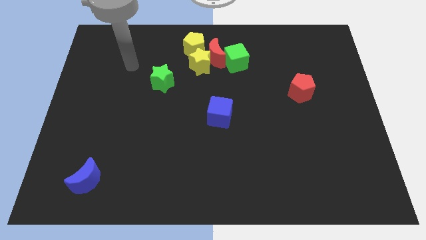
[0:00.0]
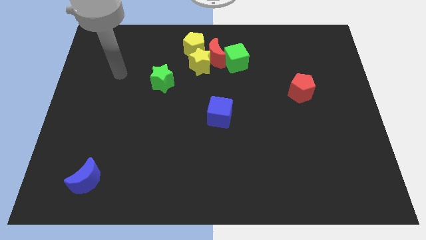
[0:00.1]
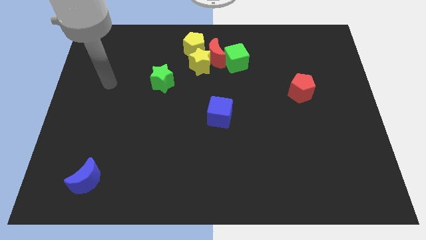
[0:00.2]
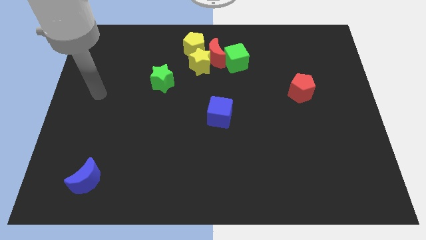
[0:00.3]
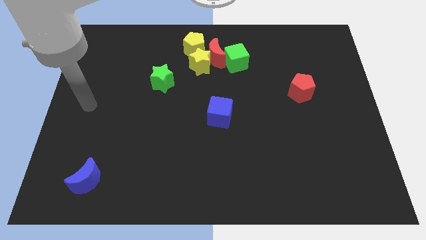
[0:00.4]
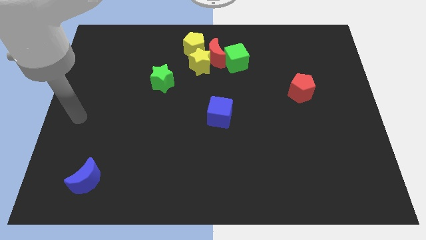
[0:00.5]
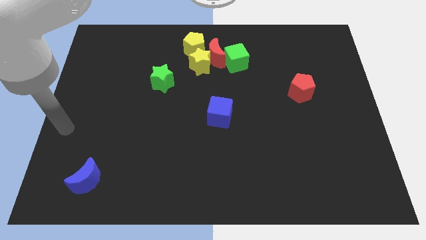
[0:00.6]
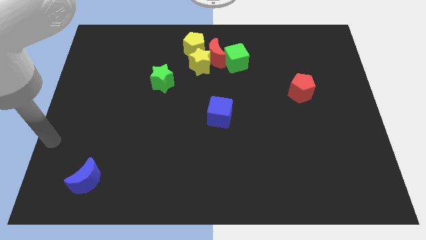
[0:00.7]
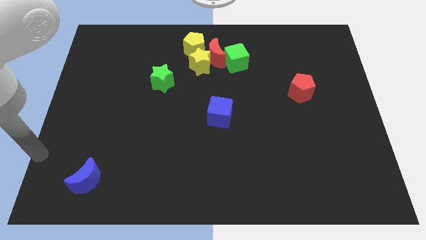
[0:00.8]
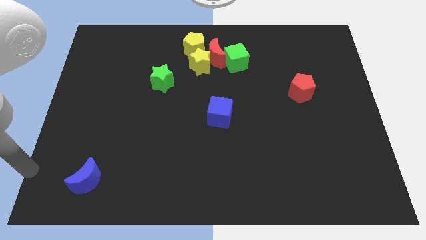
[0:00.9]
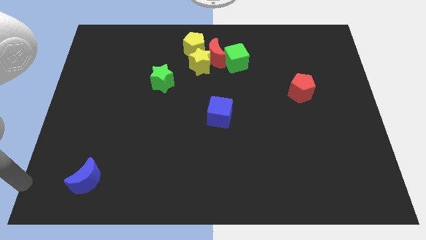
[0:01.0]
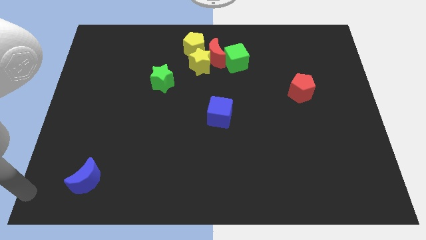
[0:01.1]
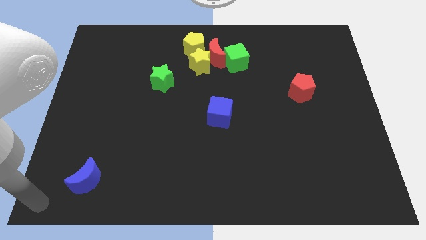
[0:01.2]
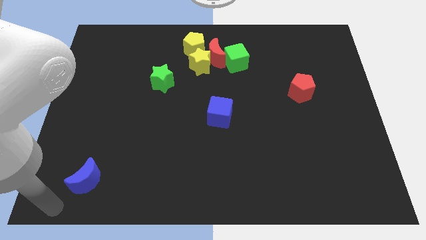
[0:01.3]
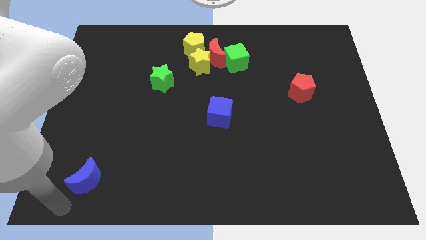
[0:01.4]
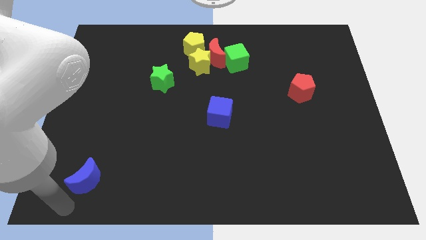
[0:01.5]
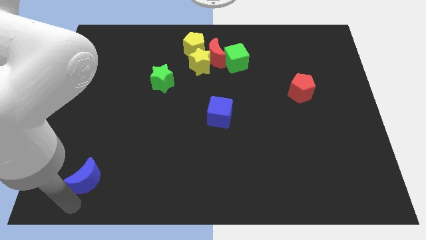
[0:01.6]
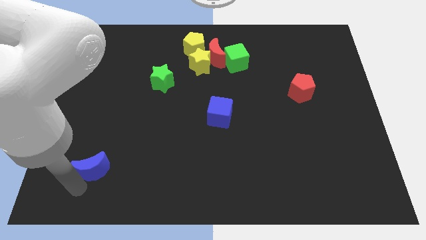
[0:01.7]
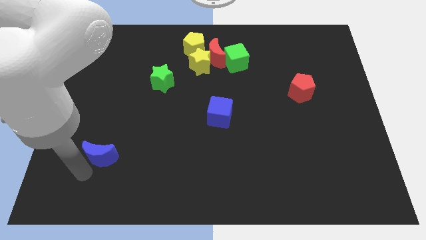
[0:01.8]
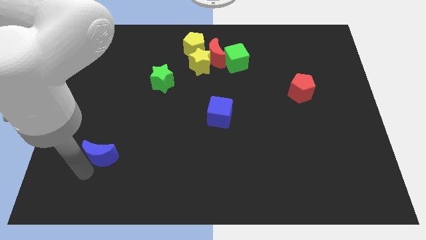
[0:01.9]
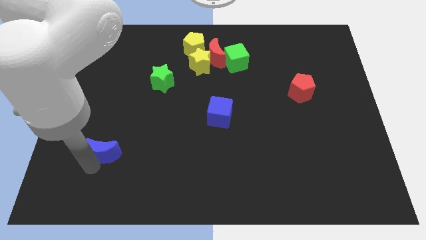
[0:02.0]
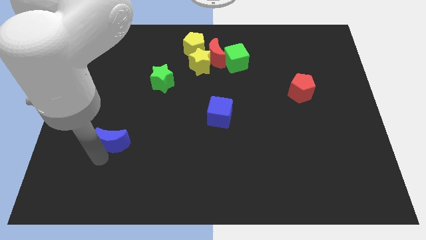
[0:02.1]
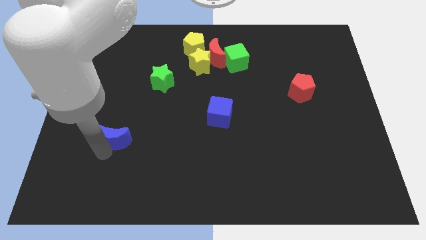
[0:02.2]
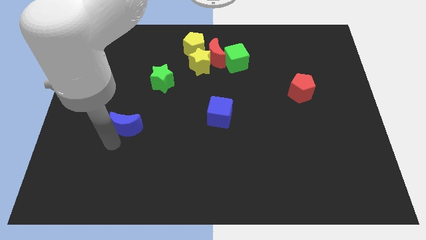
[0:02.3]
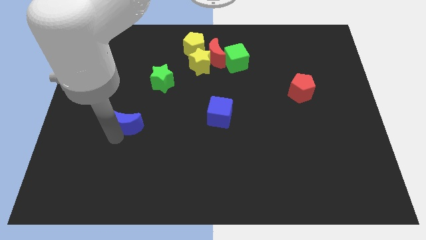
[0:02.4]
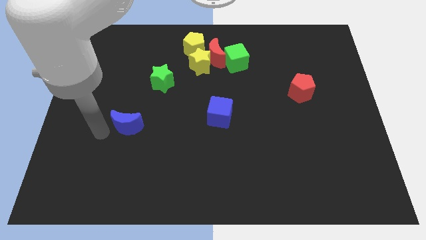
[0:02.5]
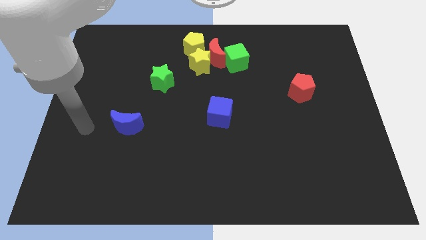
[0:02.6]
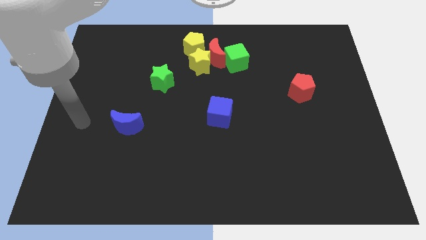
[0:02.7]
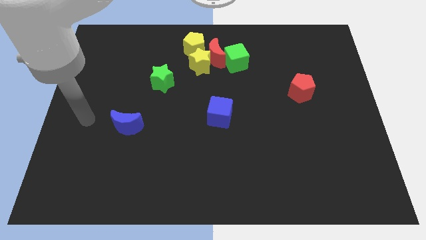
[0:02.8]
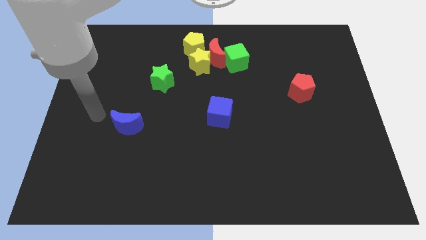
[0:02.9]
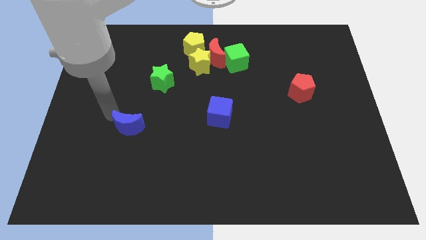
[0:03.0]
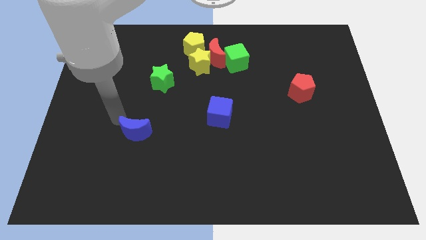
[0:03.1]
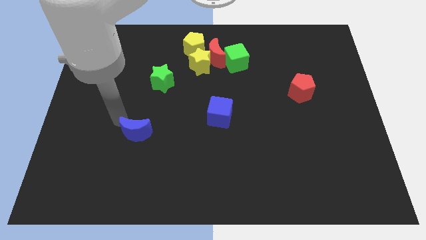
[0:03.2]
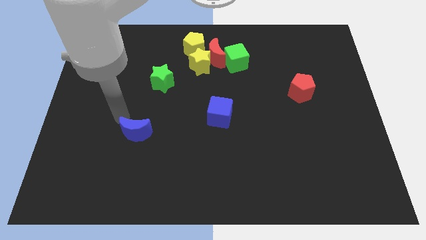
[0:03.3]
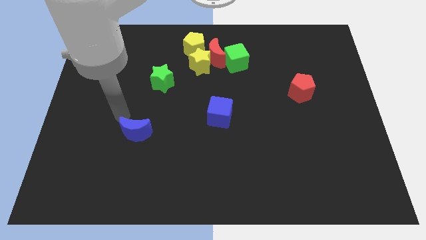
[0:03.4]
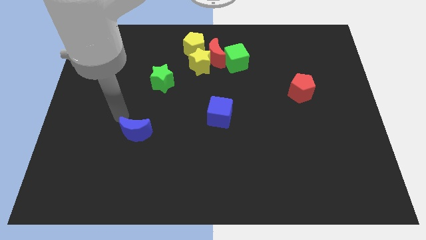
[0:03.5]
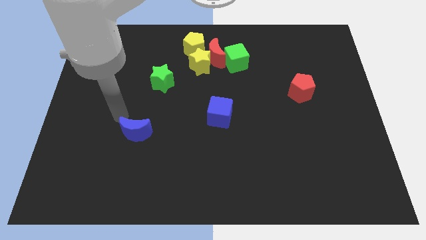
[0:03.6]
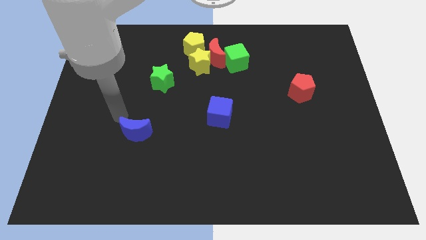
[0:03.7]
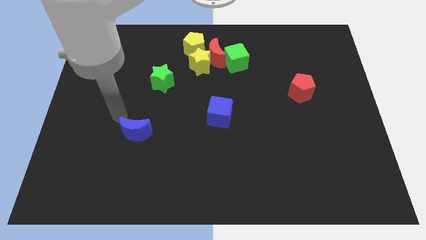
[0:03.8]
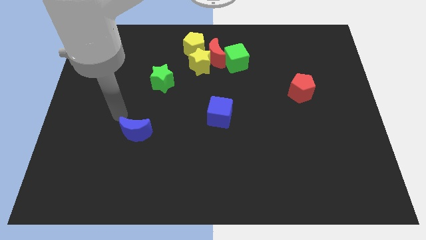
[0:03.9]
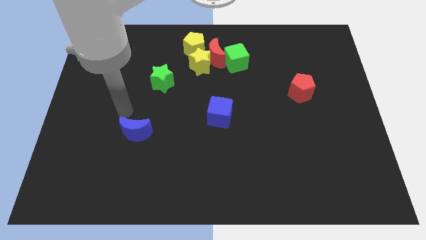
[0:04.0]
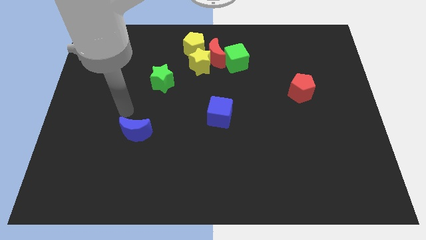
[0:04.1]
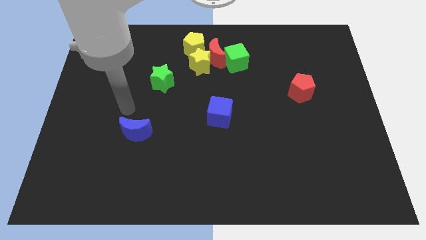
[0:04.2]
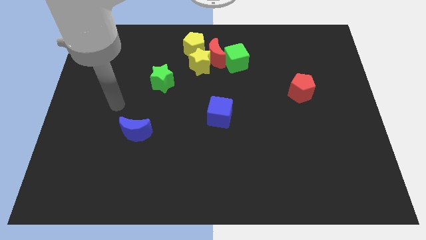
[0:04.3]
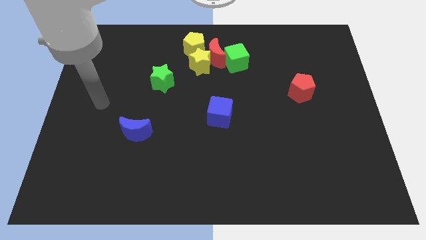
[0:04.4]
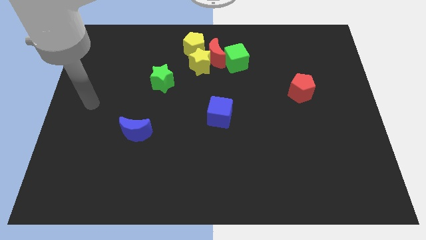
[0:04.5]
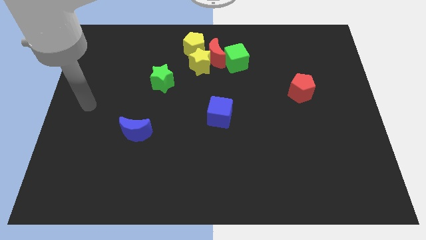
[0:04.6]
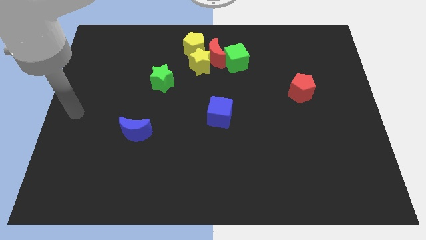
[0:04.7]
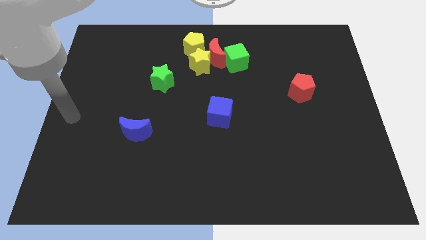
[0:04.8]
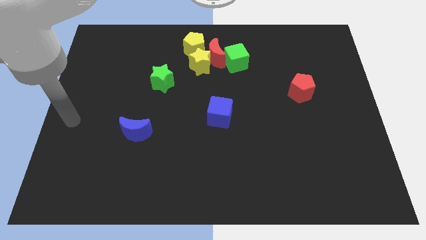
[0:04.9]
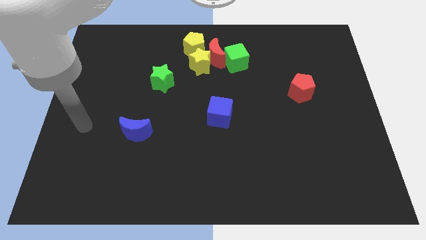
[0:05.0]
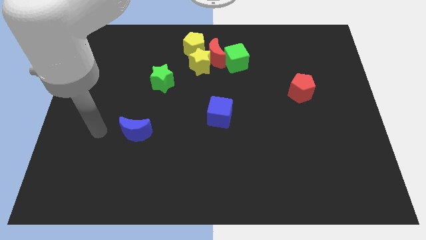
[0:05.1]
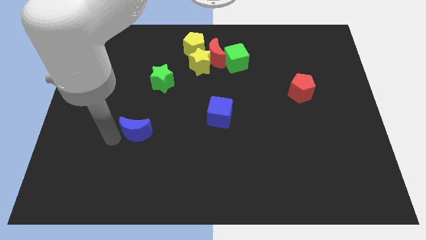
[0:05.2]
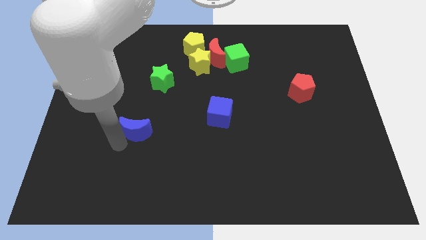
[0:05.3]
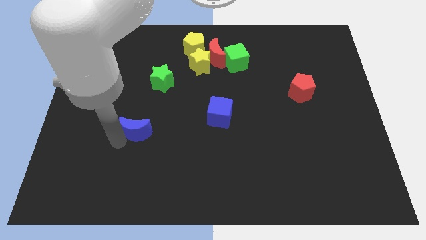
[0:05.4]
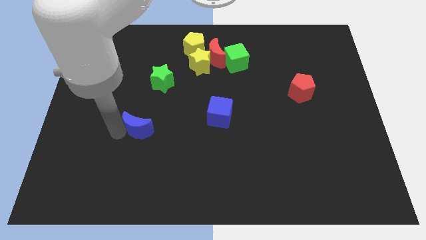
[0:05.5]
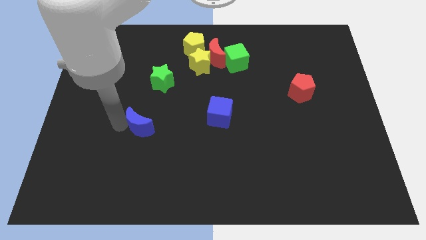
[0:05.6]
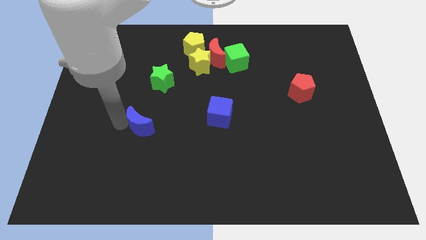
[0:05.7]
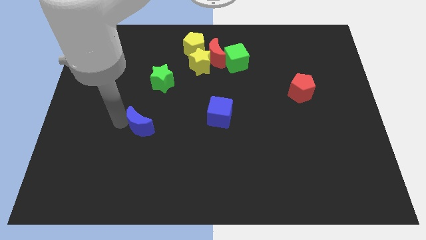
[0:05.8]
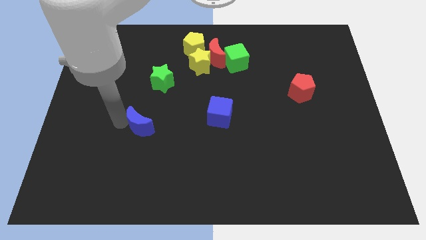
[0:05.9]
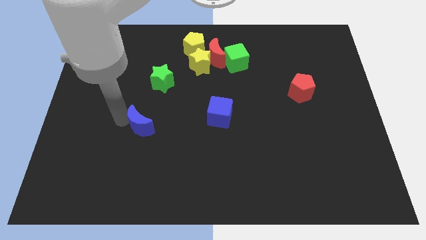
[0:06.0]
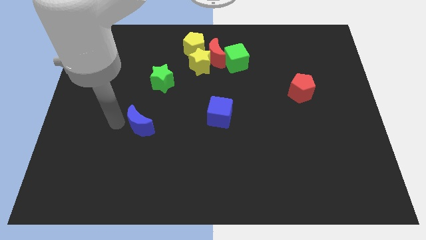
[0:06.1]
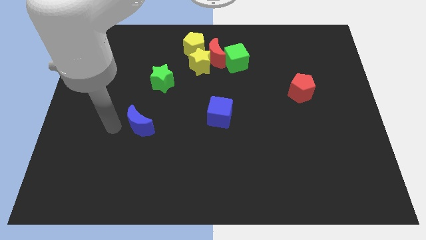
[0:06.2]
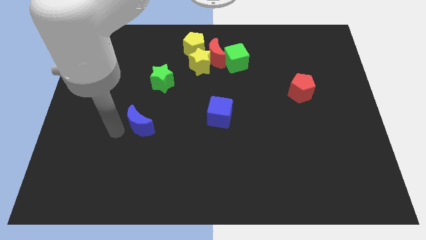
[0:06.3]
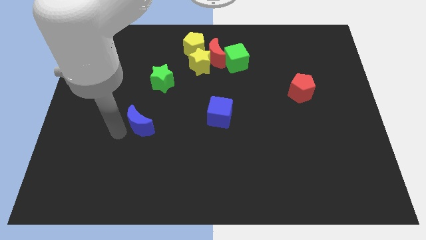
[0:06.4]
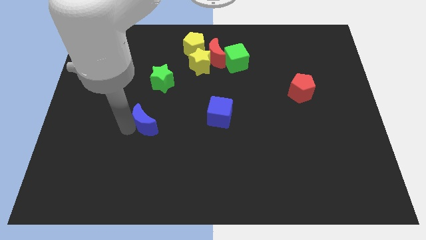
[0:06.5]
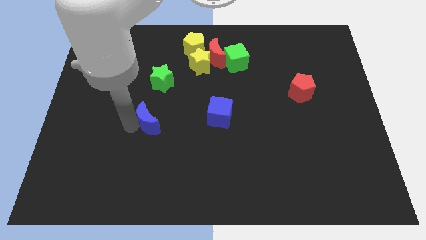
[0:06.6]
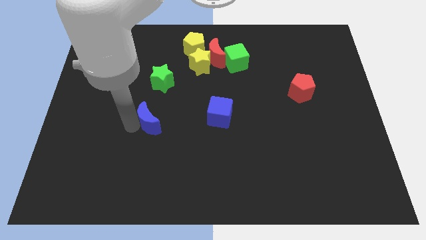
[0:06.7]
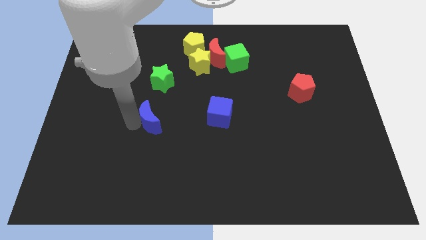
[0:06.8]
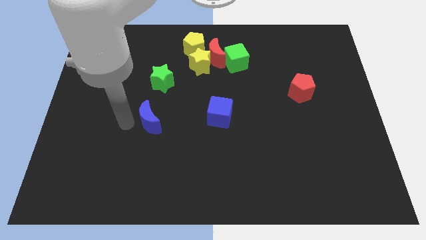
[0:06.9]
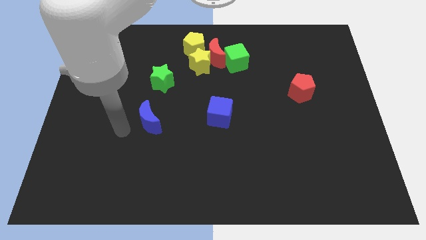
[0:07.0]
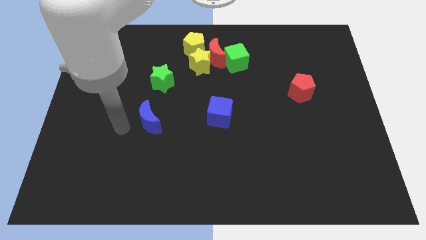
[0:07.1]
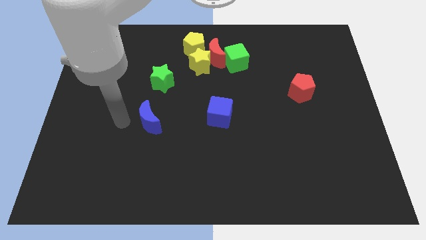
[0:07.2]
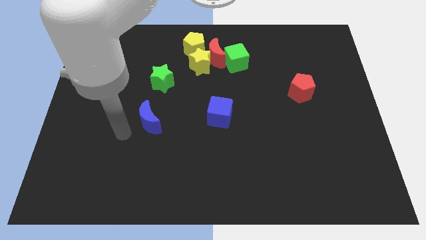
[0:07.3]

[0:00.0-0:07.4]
place the blue crescent to the bottom of the green star

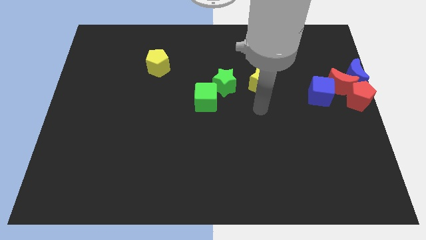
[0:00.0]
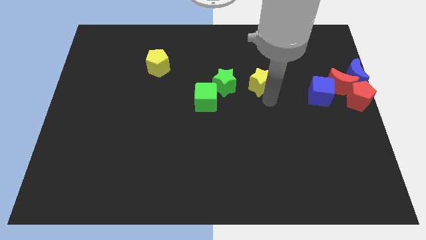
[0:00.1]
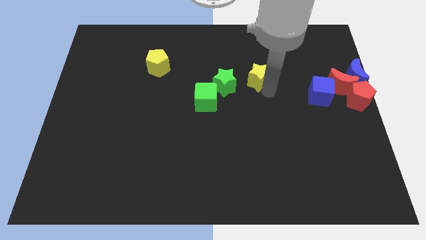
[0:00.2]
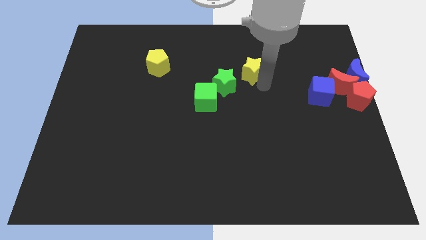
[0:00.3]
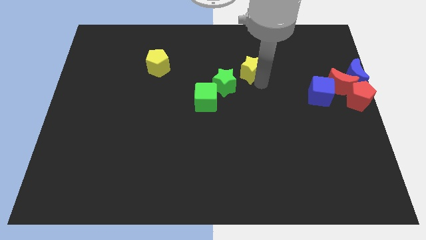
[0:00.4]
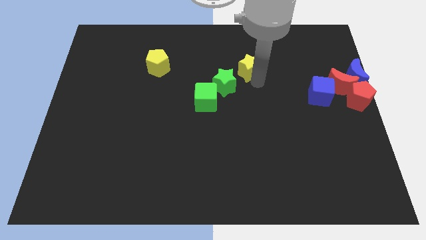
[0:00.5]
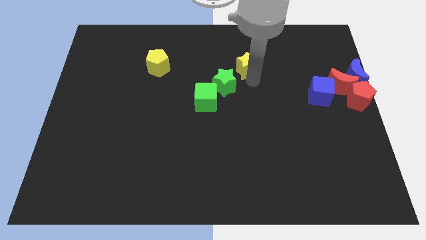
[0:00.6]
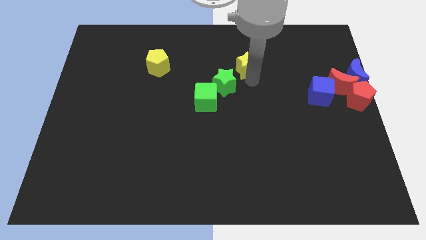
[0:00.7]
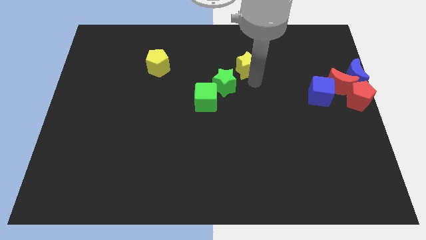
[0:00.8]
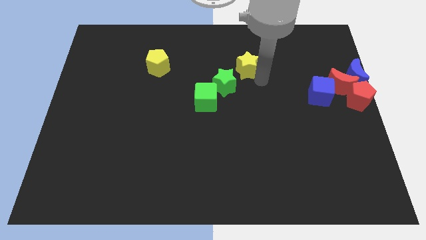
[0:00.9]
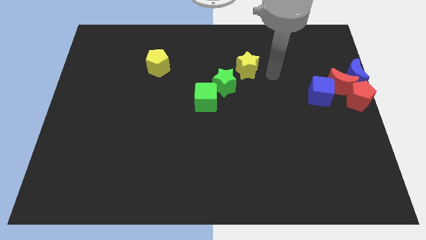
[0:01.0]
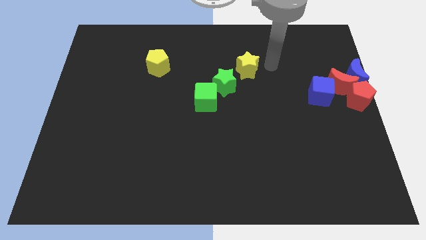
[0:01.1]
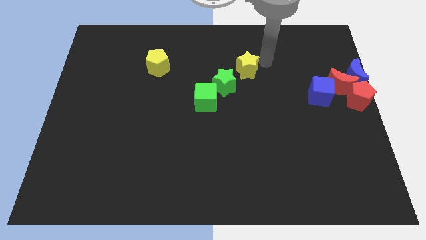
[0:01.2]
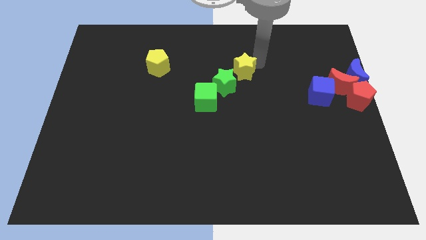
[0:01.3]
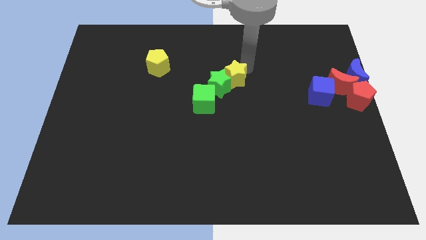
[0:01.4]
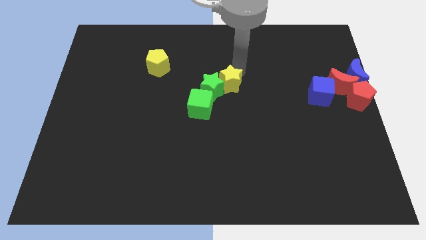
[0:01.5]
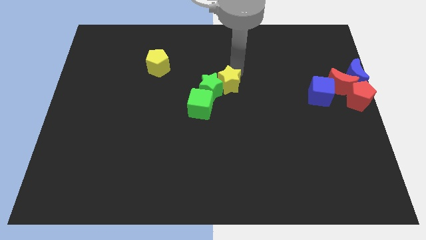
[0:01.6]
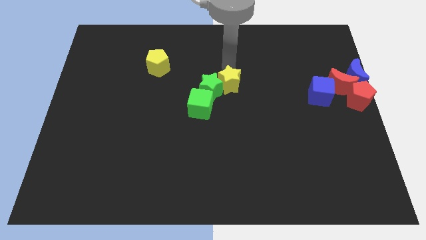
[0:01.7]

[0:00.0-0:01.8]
push the yellow star into the green star
